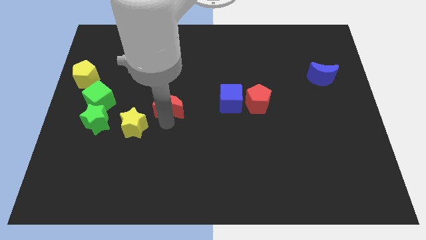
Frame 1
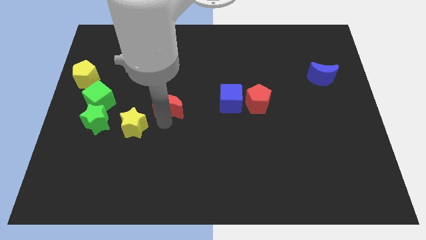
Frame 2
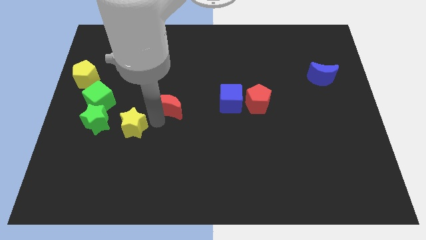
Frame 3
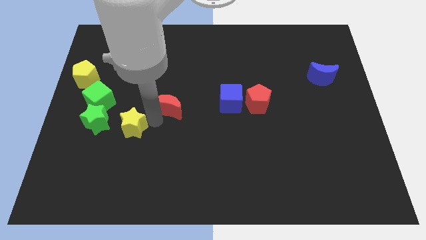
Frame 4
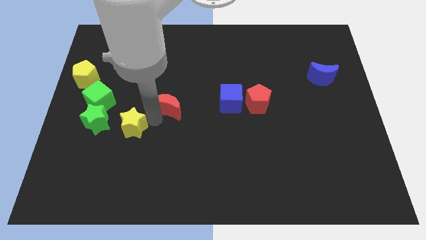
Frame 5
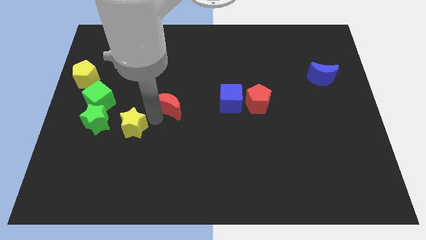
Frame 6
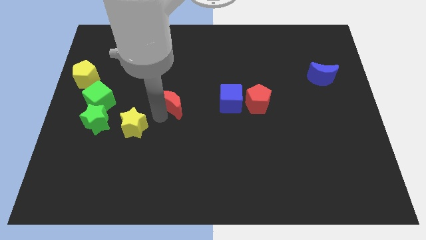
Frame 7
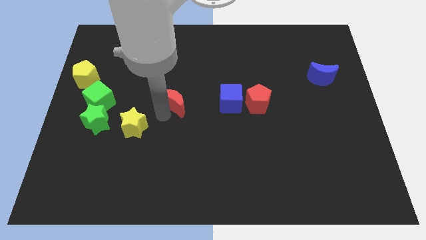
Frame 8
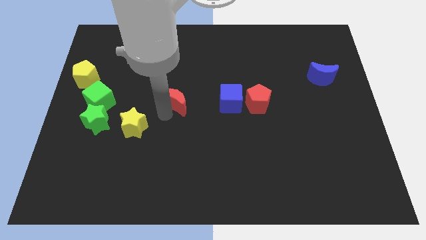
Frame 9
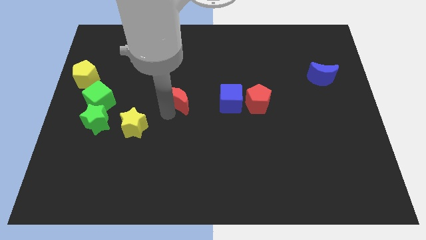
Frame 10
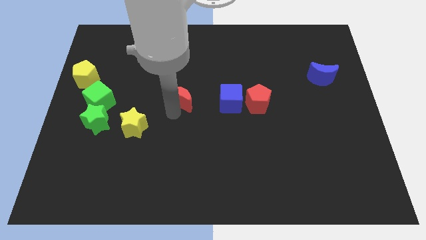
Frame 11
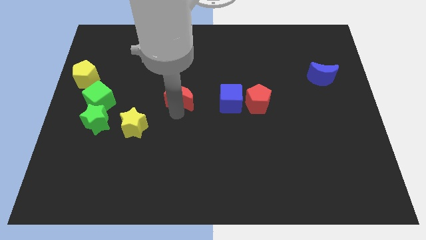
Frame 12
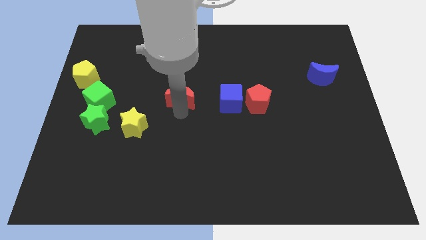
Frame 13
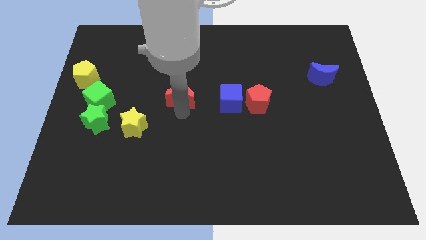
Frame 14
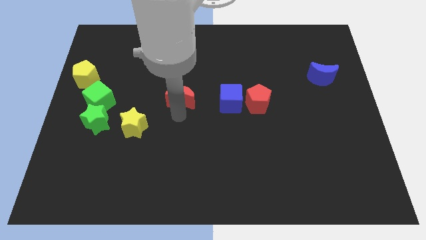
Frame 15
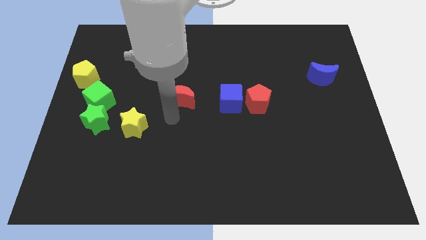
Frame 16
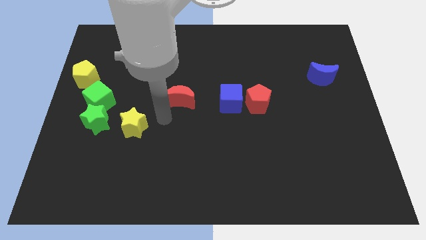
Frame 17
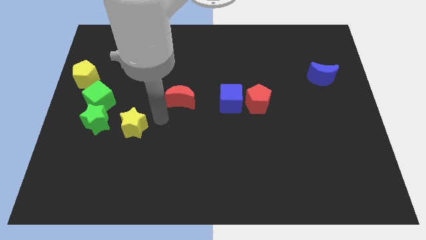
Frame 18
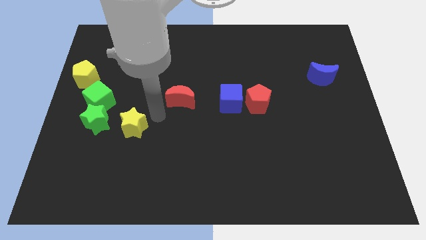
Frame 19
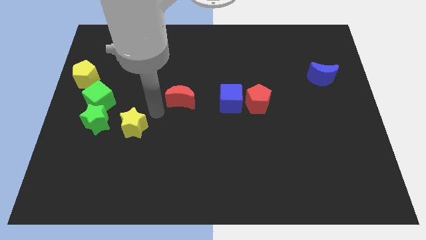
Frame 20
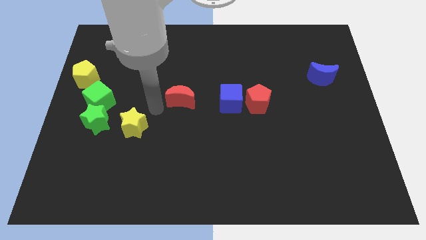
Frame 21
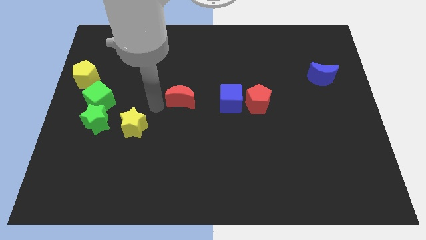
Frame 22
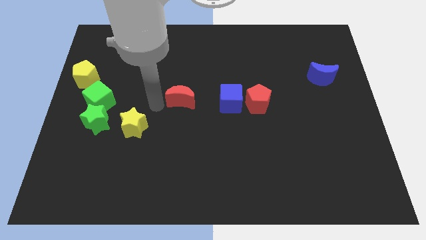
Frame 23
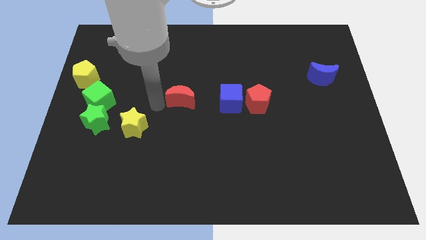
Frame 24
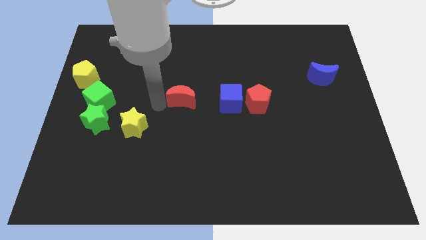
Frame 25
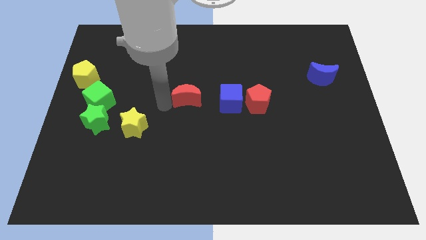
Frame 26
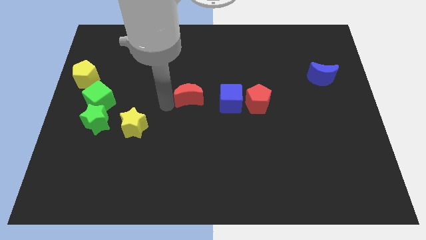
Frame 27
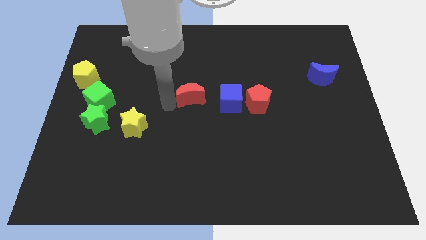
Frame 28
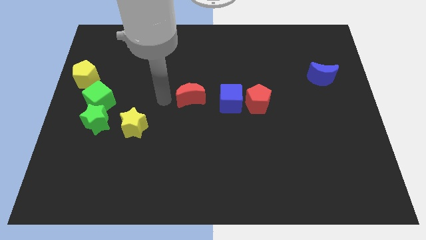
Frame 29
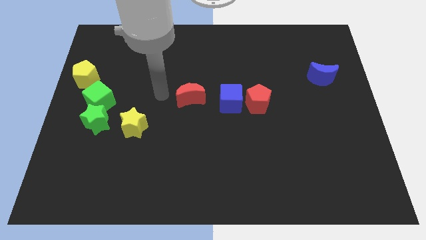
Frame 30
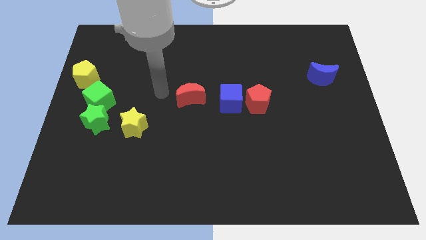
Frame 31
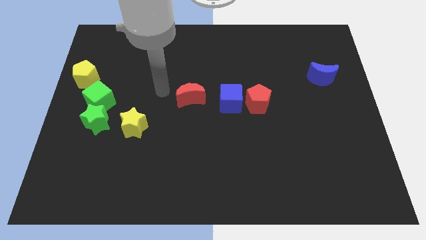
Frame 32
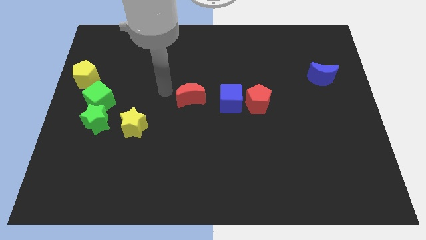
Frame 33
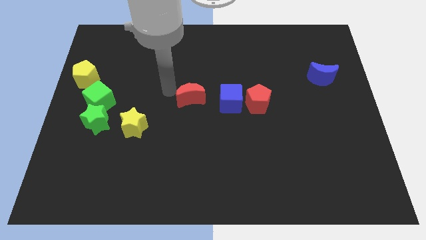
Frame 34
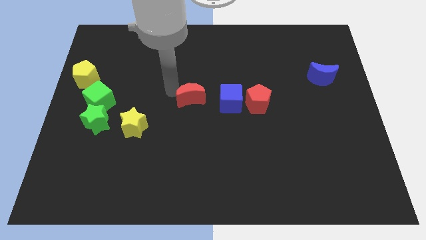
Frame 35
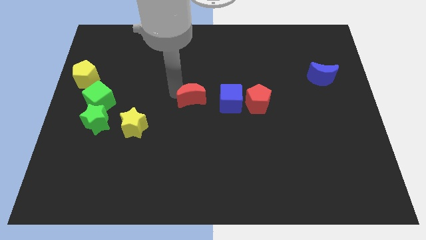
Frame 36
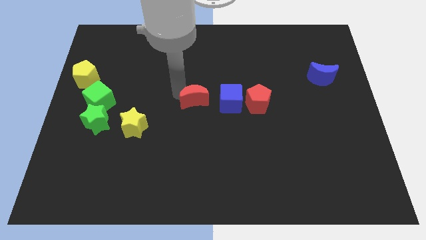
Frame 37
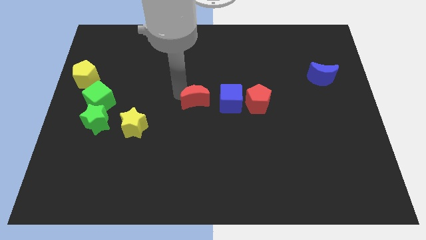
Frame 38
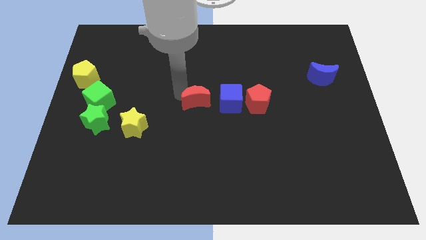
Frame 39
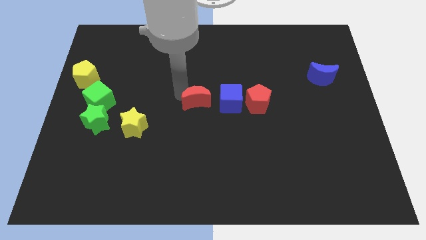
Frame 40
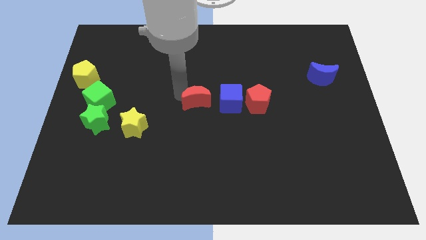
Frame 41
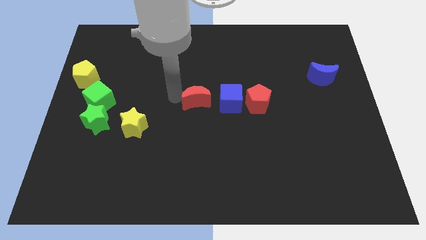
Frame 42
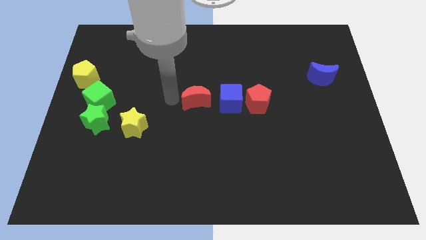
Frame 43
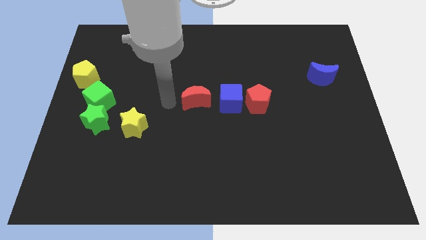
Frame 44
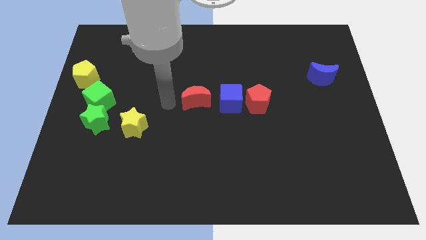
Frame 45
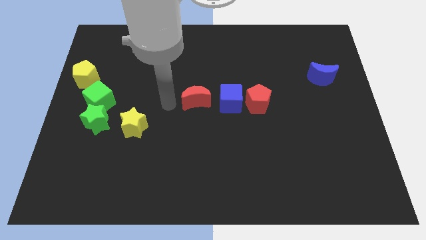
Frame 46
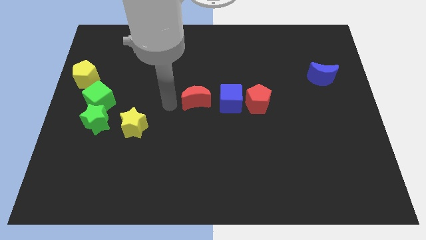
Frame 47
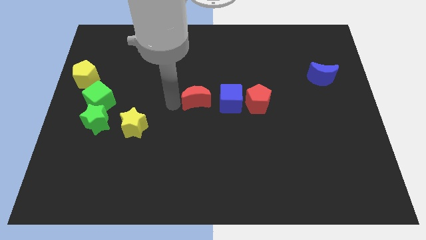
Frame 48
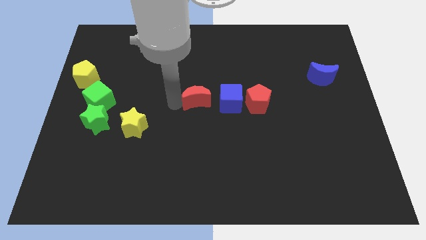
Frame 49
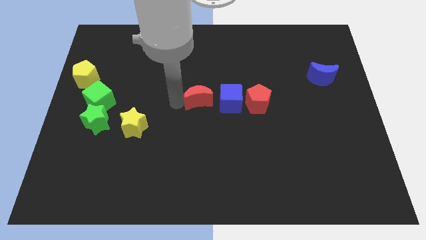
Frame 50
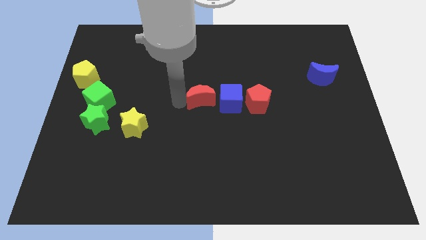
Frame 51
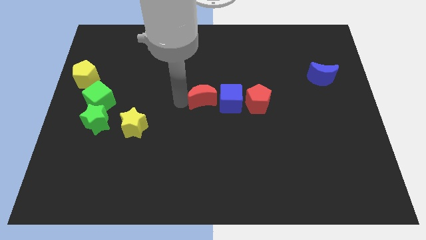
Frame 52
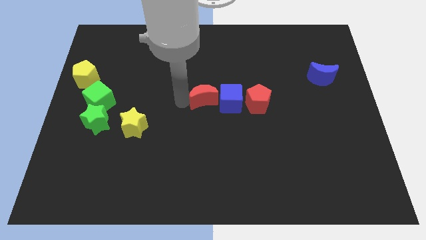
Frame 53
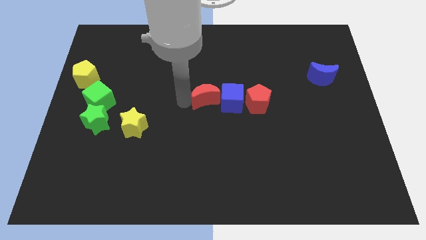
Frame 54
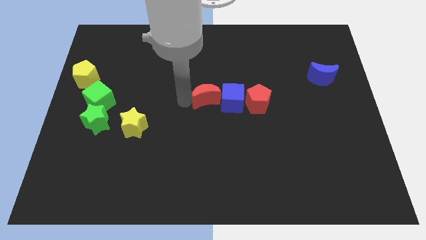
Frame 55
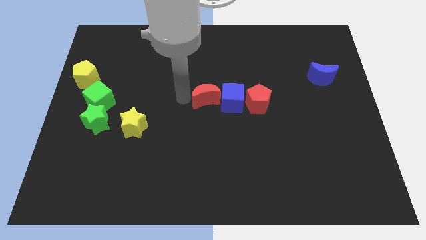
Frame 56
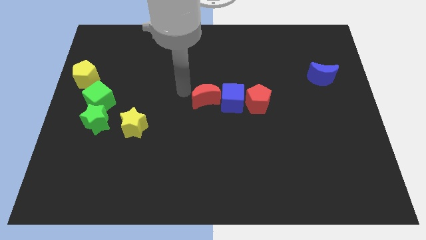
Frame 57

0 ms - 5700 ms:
place red crescent to the left of blue cube

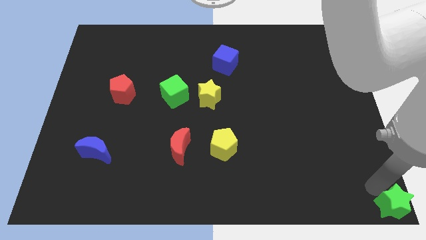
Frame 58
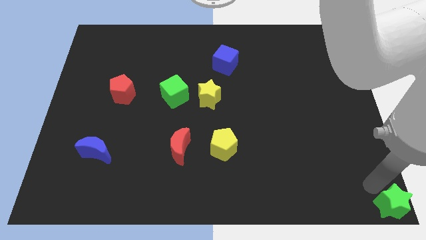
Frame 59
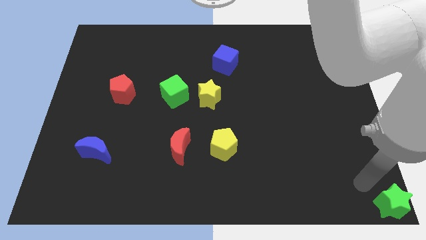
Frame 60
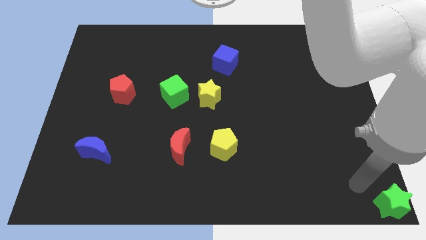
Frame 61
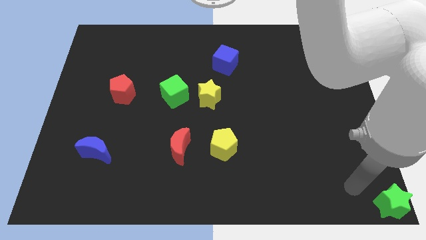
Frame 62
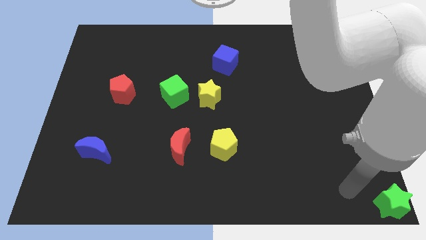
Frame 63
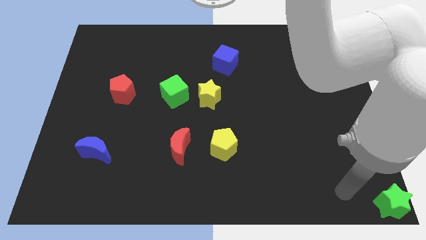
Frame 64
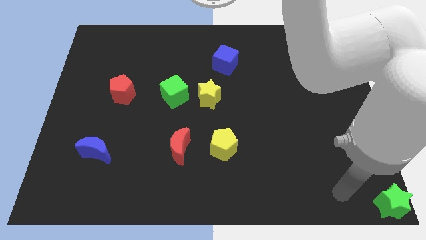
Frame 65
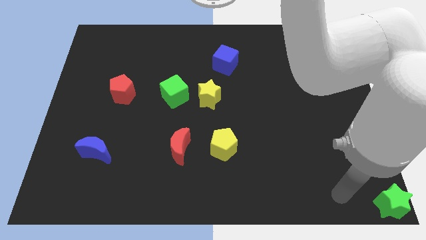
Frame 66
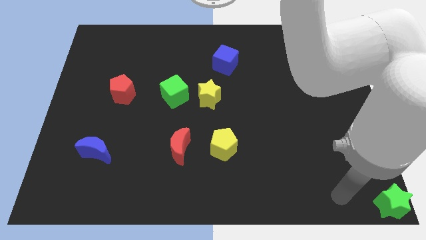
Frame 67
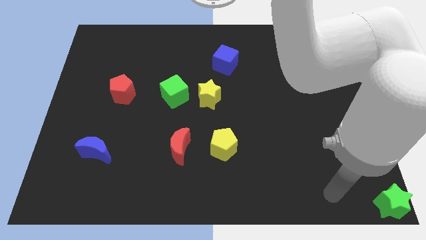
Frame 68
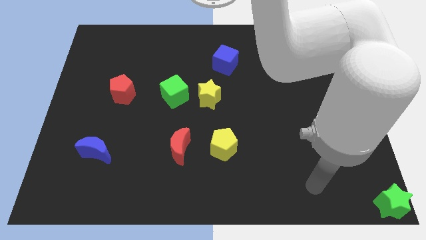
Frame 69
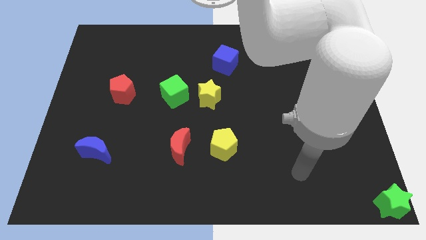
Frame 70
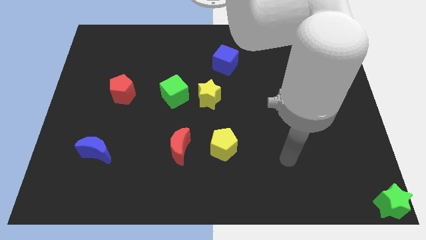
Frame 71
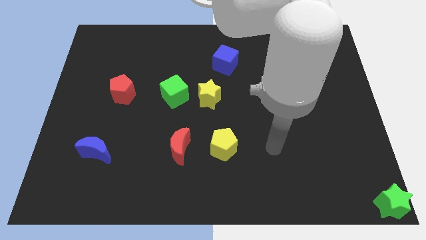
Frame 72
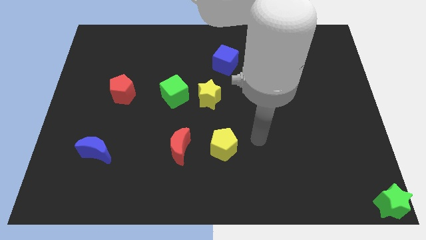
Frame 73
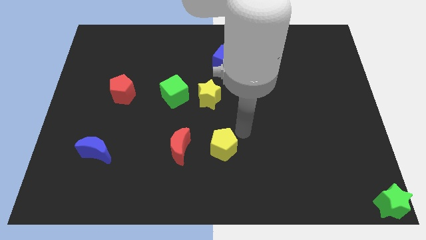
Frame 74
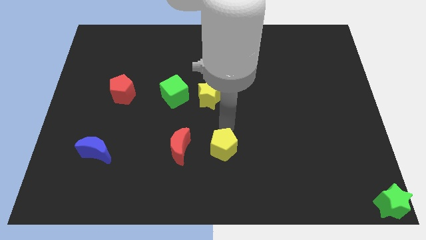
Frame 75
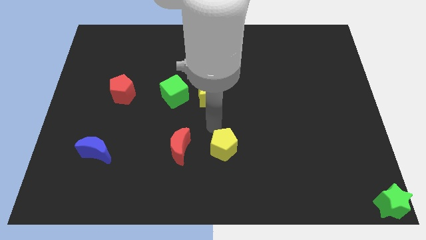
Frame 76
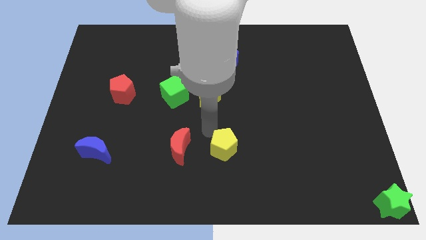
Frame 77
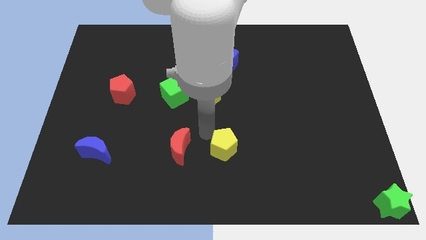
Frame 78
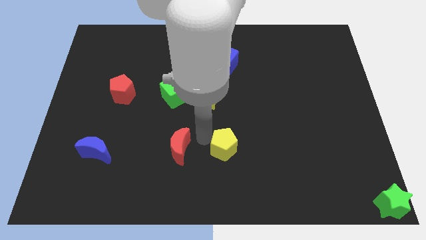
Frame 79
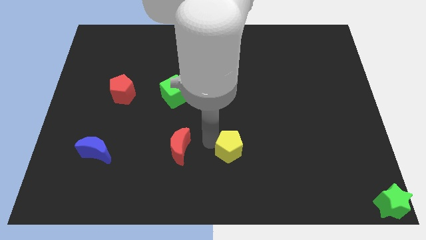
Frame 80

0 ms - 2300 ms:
move the arm to the yellow pentagon

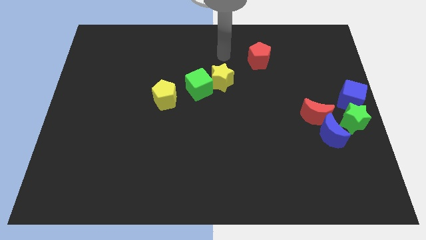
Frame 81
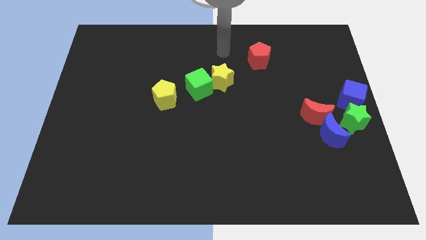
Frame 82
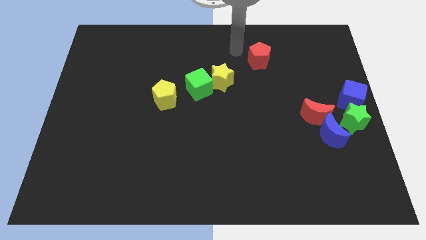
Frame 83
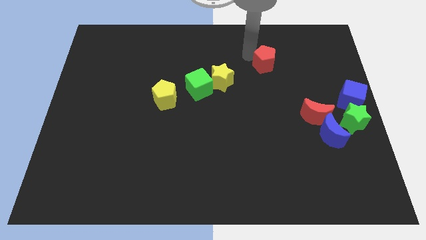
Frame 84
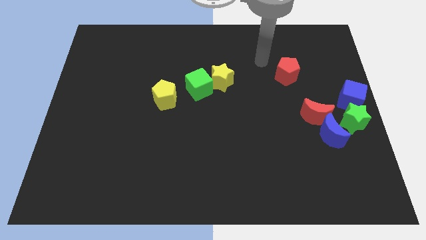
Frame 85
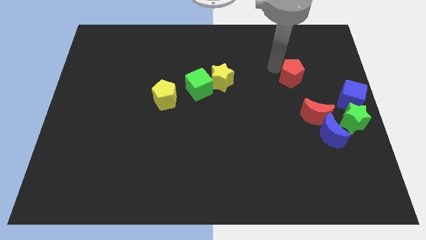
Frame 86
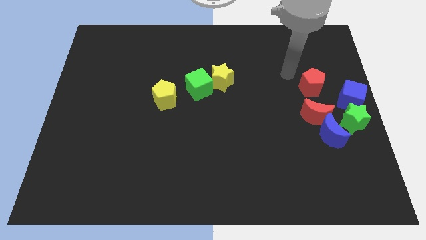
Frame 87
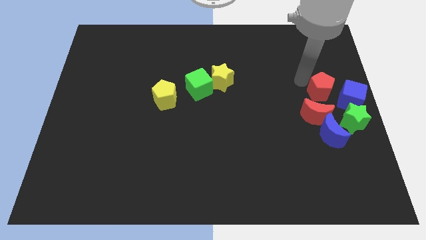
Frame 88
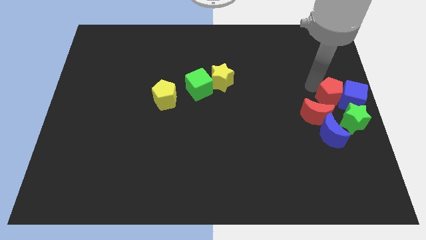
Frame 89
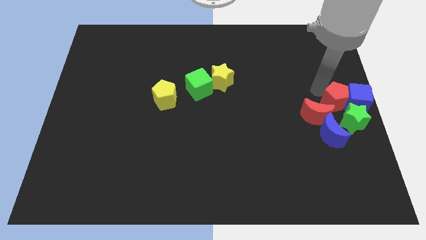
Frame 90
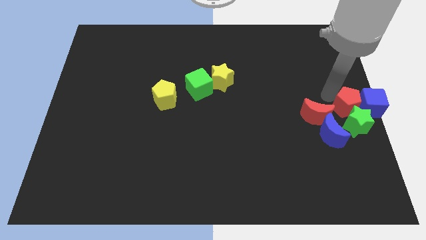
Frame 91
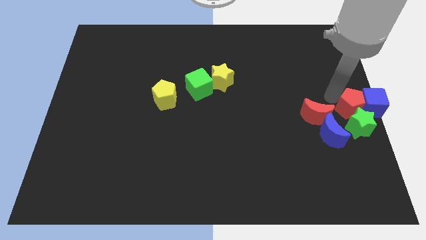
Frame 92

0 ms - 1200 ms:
move the red pentagon into the blue cube
